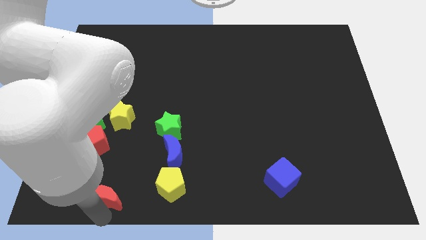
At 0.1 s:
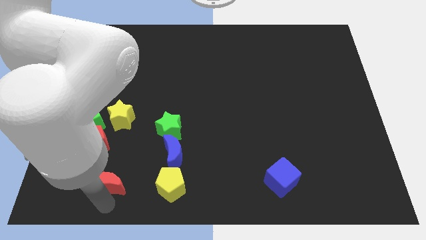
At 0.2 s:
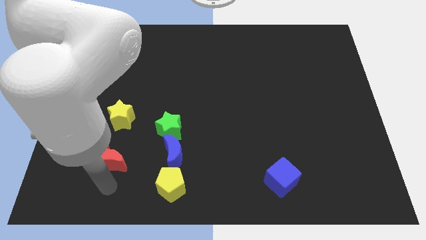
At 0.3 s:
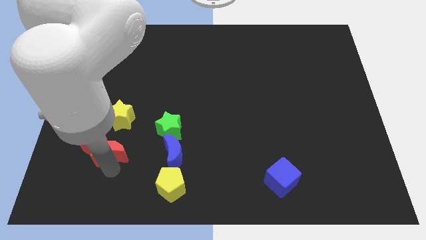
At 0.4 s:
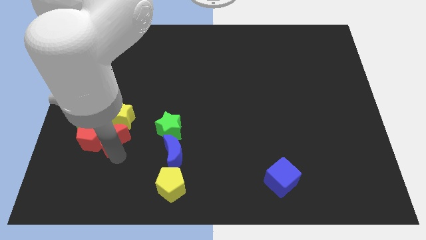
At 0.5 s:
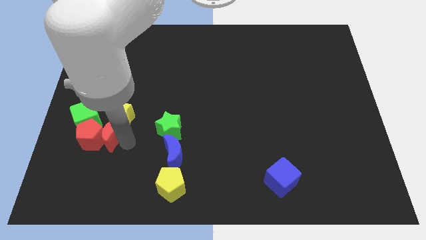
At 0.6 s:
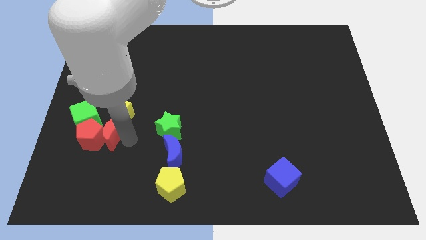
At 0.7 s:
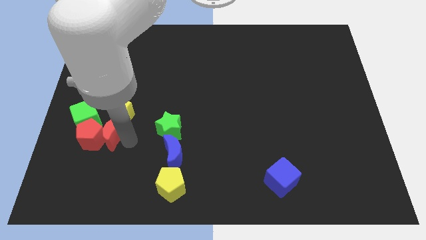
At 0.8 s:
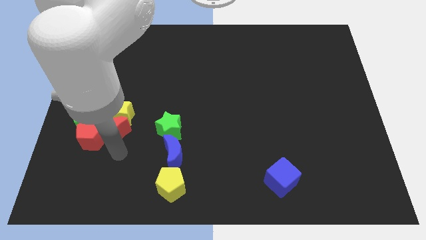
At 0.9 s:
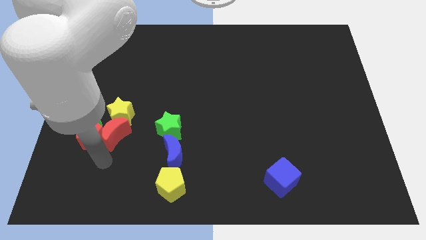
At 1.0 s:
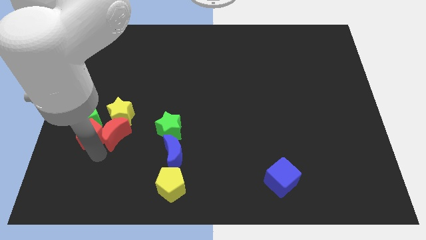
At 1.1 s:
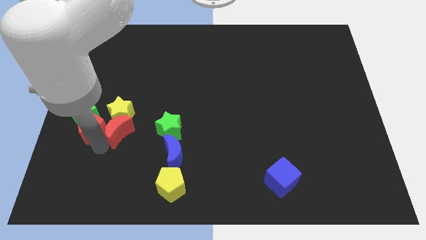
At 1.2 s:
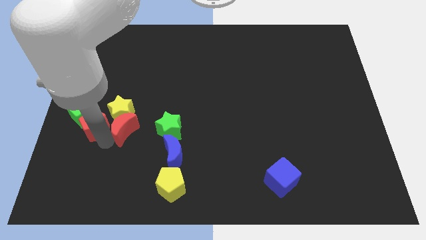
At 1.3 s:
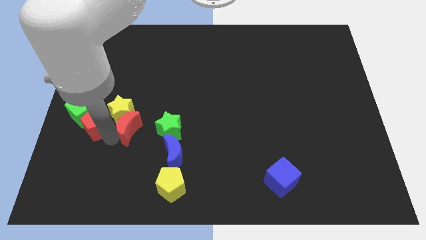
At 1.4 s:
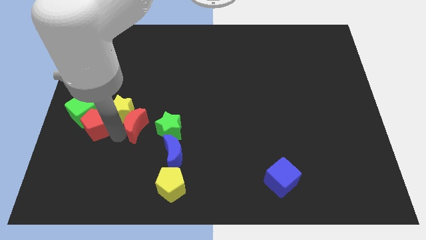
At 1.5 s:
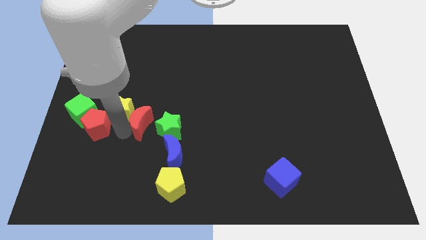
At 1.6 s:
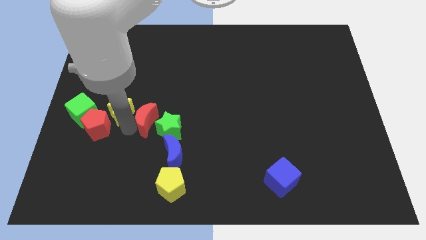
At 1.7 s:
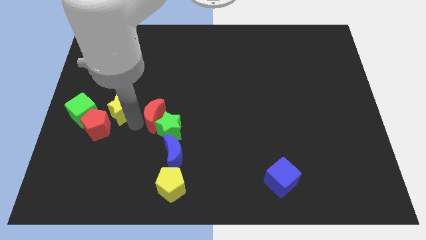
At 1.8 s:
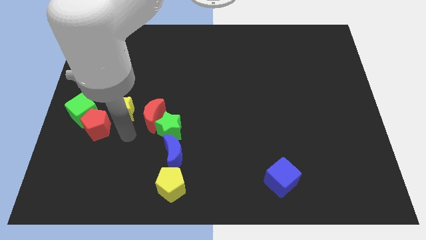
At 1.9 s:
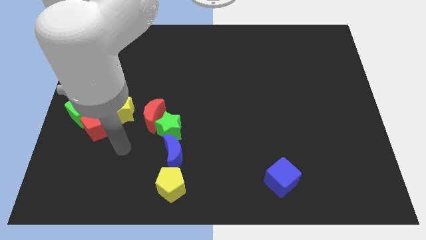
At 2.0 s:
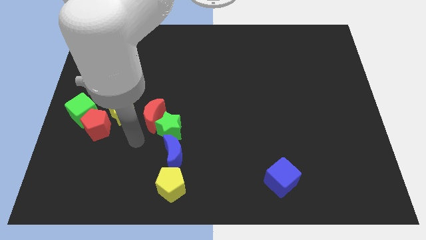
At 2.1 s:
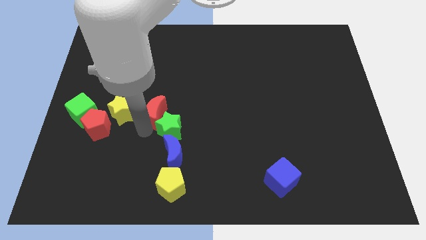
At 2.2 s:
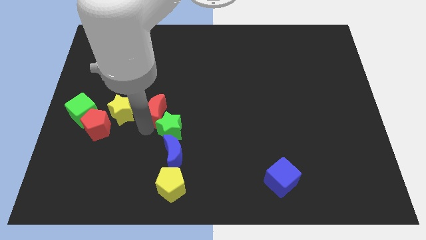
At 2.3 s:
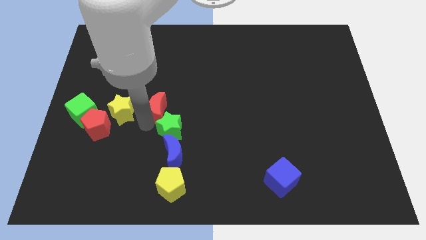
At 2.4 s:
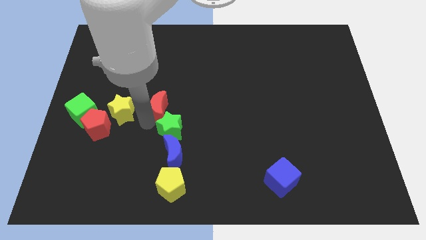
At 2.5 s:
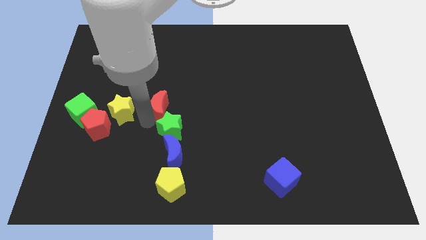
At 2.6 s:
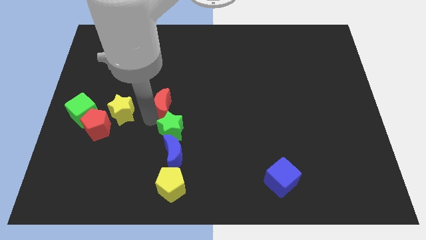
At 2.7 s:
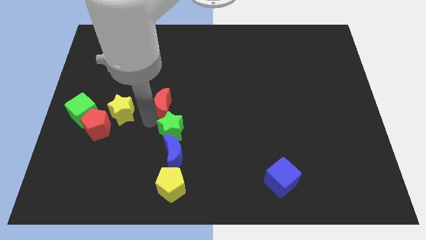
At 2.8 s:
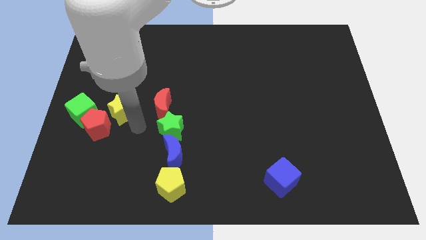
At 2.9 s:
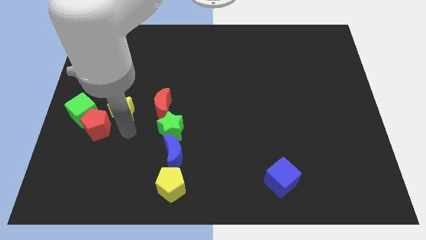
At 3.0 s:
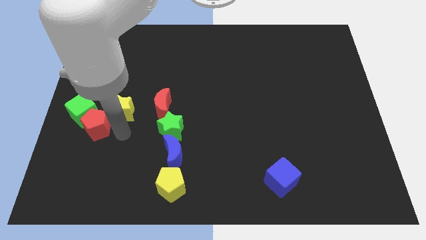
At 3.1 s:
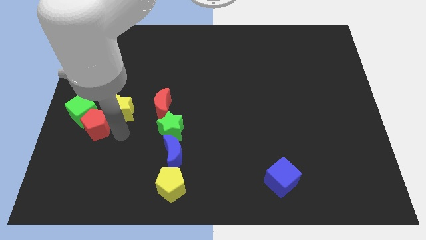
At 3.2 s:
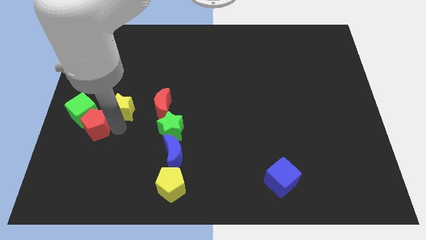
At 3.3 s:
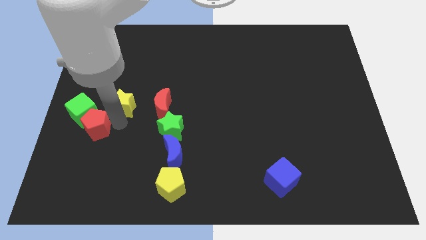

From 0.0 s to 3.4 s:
push the red crescent to the top of the green star

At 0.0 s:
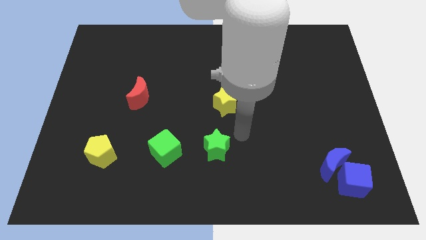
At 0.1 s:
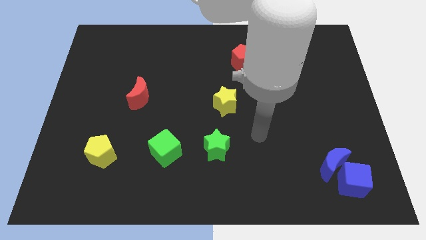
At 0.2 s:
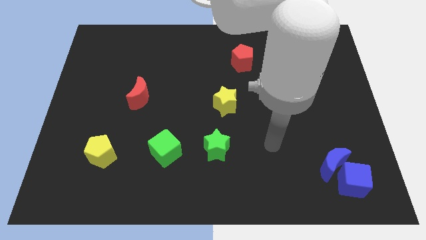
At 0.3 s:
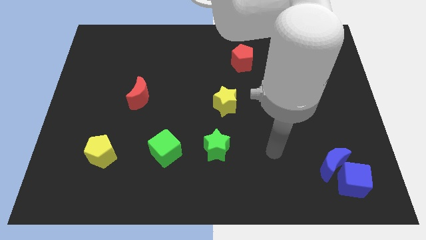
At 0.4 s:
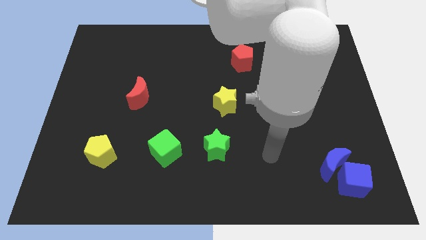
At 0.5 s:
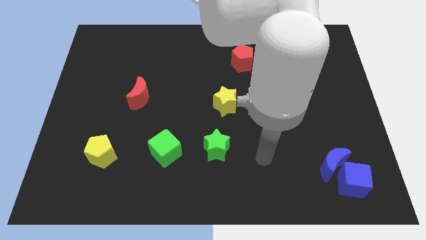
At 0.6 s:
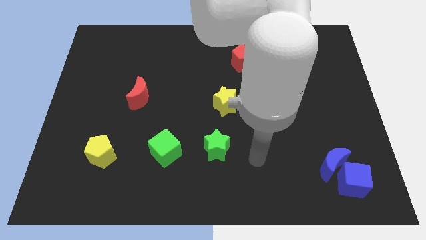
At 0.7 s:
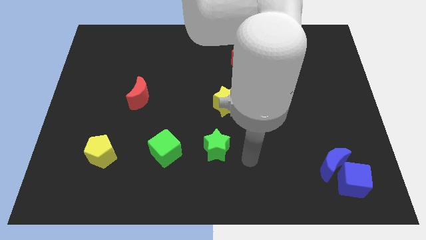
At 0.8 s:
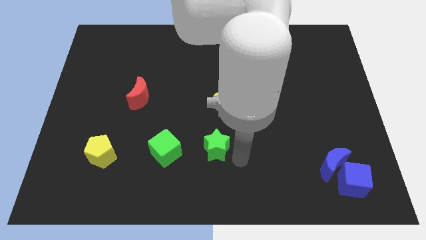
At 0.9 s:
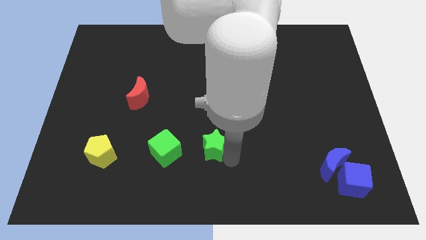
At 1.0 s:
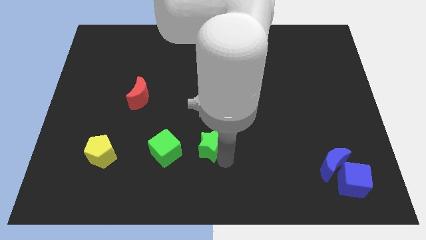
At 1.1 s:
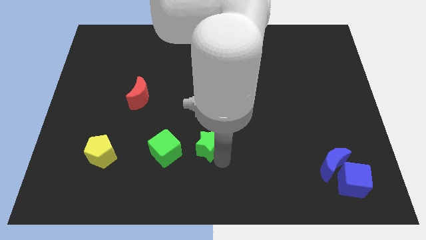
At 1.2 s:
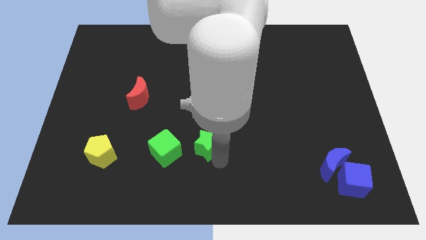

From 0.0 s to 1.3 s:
push the green star slightly to the left

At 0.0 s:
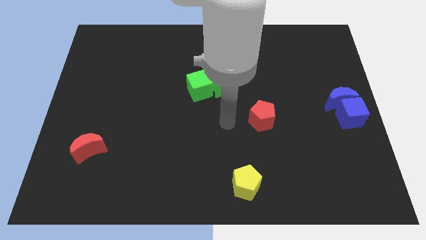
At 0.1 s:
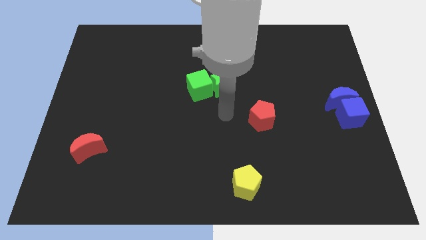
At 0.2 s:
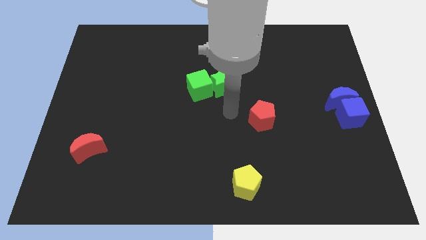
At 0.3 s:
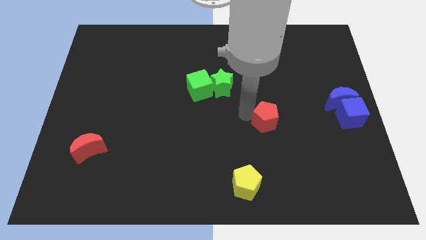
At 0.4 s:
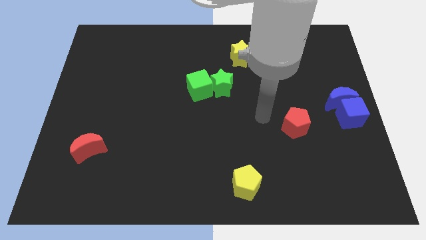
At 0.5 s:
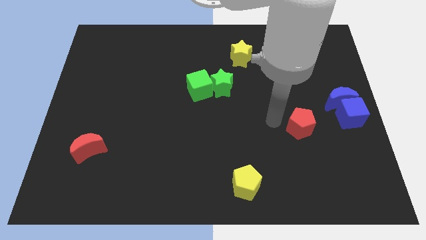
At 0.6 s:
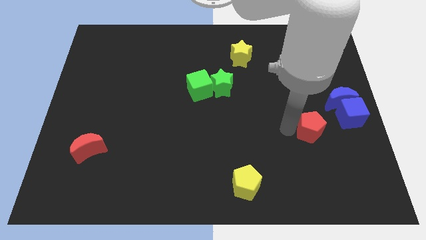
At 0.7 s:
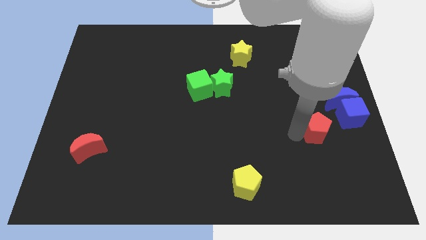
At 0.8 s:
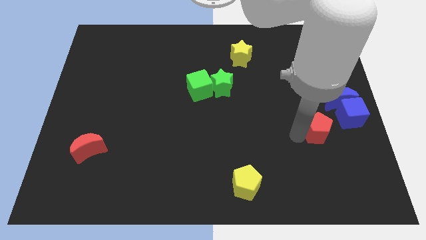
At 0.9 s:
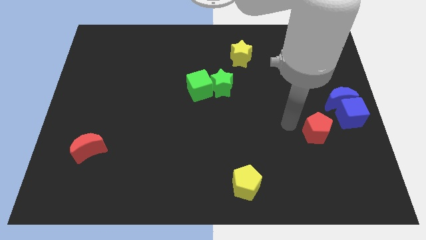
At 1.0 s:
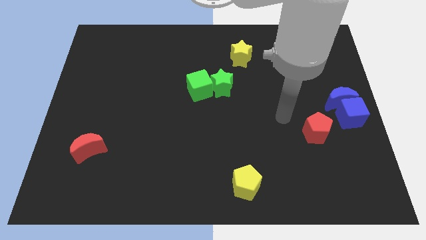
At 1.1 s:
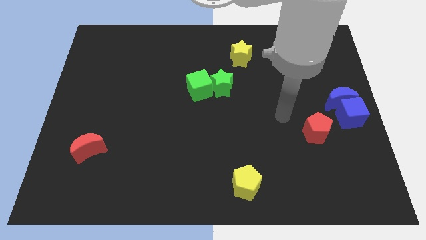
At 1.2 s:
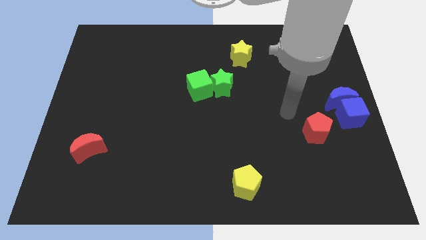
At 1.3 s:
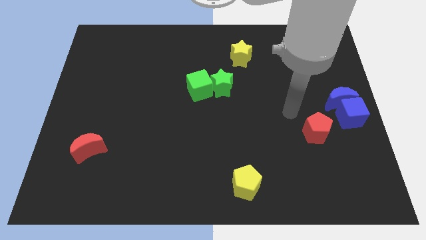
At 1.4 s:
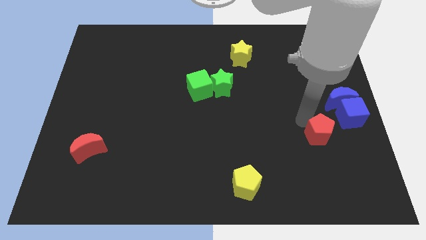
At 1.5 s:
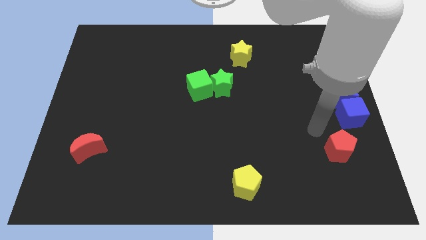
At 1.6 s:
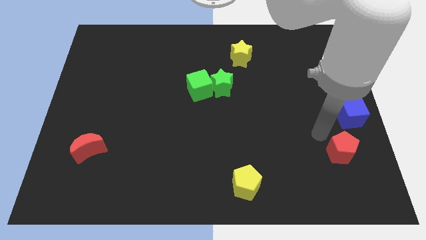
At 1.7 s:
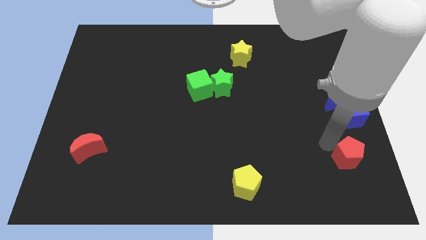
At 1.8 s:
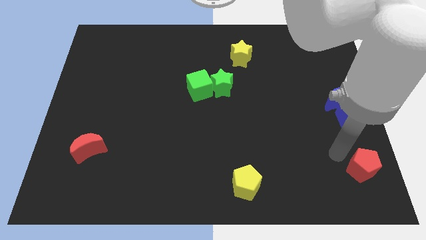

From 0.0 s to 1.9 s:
push the red pentagon towards the right side

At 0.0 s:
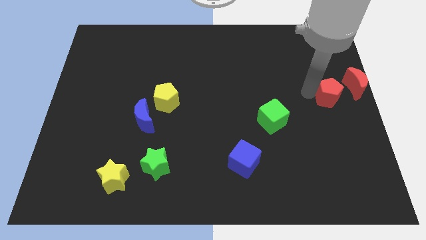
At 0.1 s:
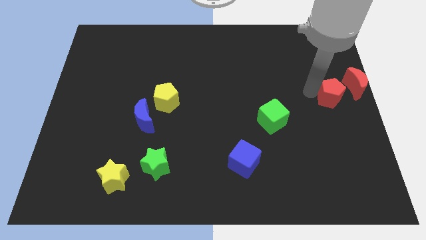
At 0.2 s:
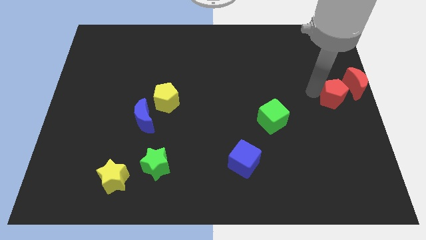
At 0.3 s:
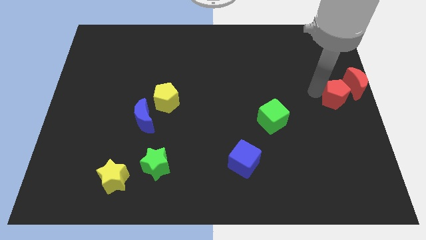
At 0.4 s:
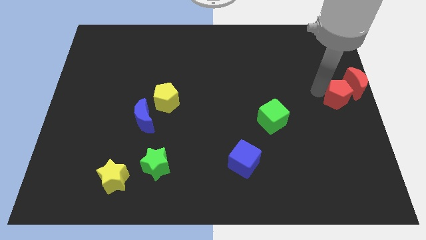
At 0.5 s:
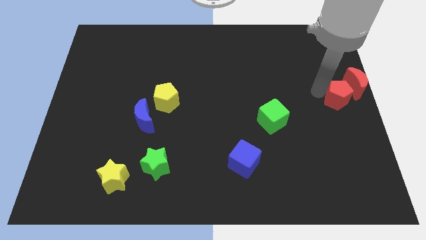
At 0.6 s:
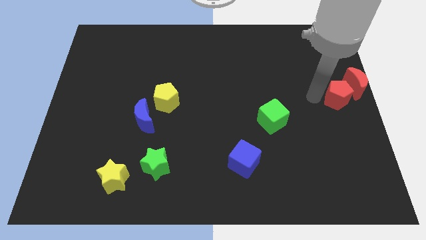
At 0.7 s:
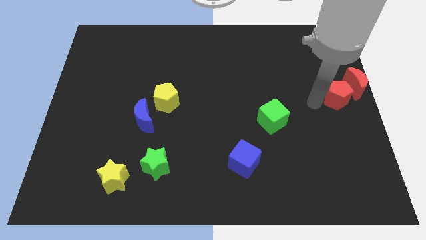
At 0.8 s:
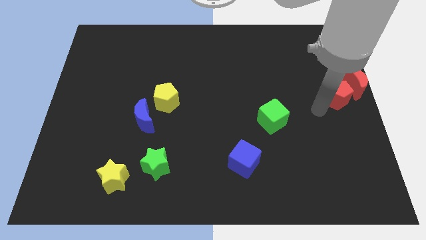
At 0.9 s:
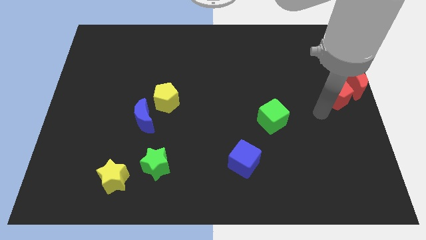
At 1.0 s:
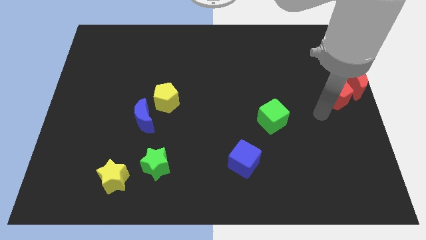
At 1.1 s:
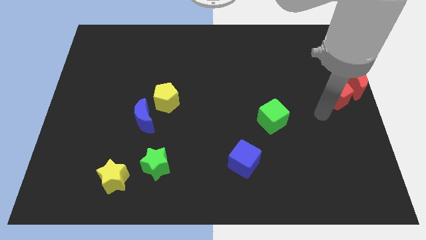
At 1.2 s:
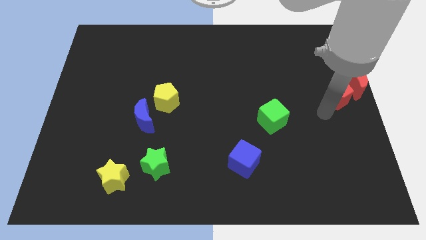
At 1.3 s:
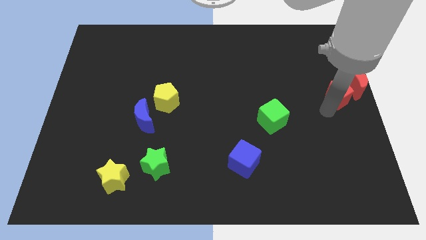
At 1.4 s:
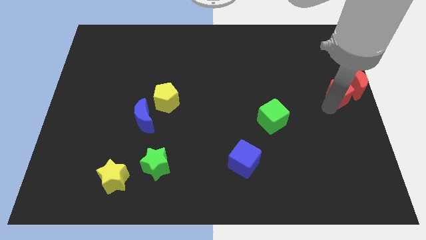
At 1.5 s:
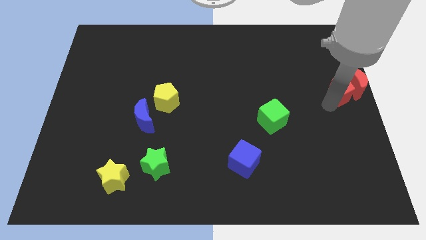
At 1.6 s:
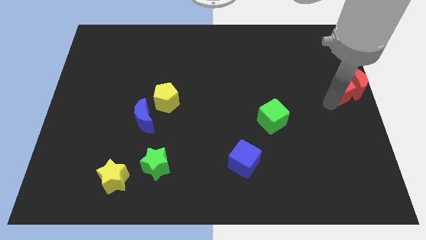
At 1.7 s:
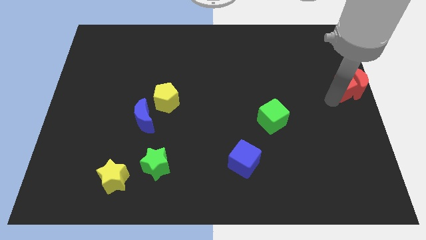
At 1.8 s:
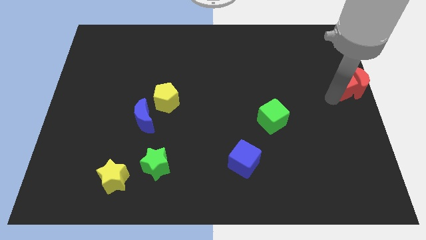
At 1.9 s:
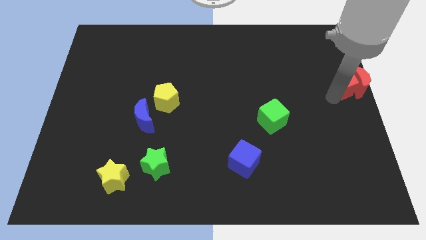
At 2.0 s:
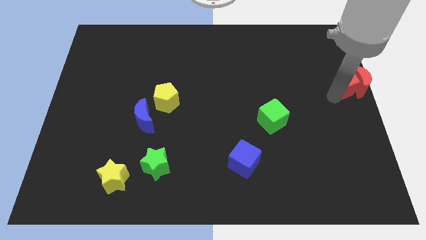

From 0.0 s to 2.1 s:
move red pentagon into red moon

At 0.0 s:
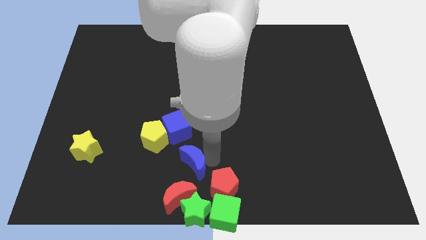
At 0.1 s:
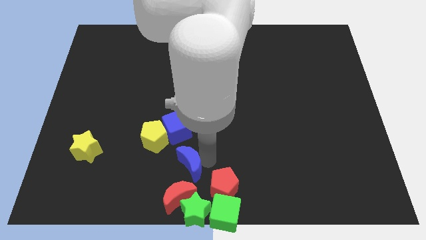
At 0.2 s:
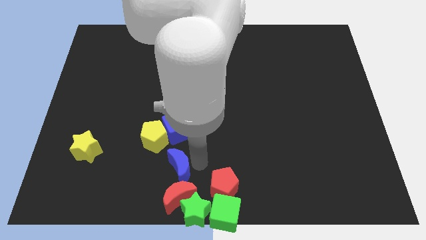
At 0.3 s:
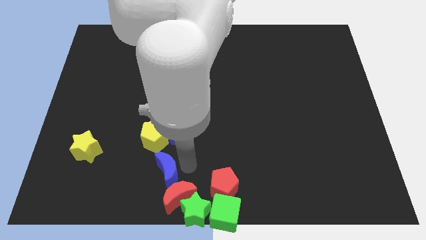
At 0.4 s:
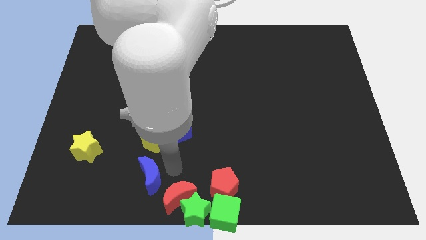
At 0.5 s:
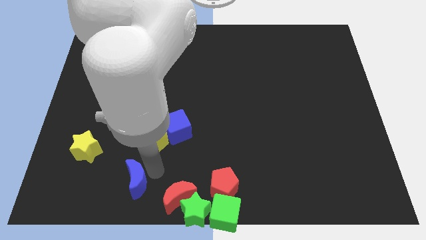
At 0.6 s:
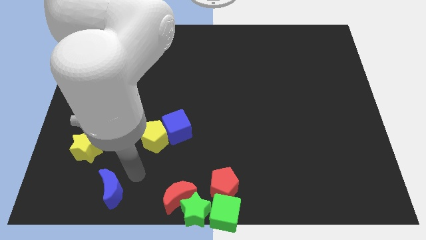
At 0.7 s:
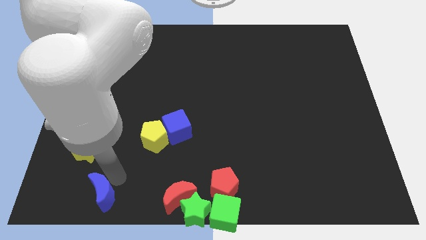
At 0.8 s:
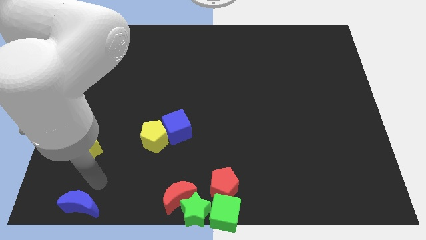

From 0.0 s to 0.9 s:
move the blue moon down to the yellow star
